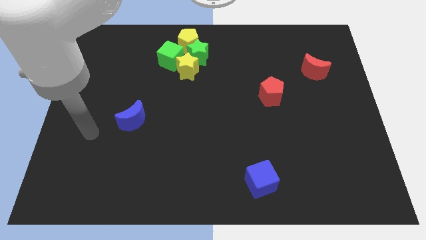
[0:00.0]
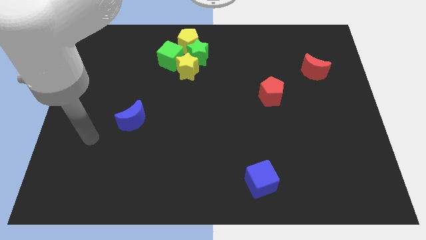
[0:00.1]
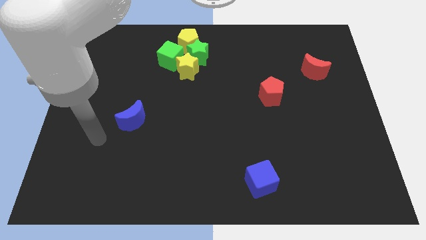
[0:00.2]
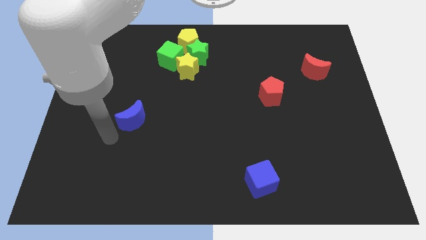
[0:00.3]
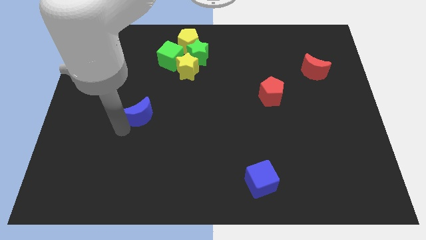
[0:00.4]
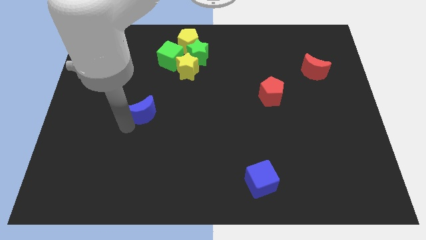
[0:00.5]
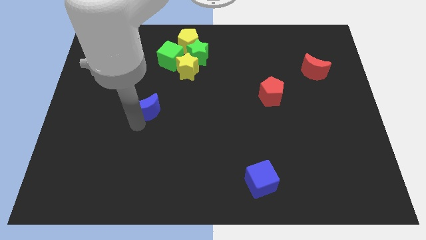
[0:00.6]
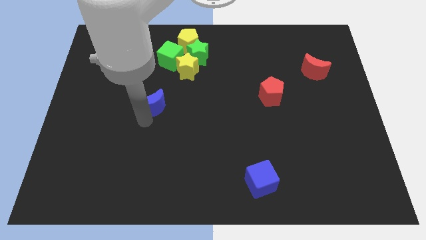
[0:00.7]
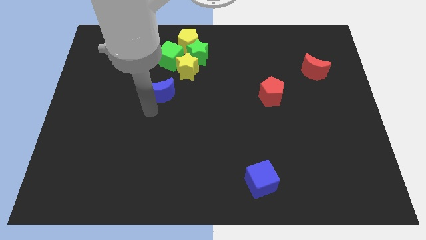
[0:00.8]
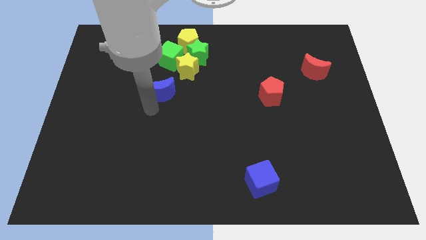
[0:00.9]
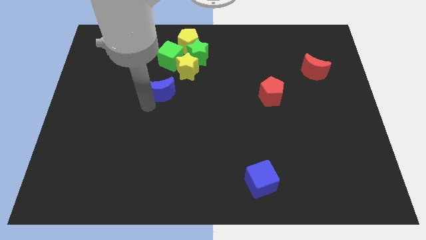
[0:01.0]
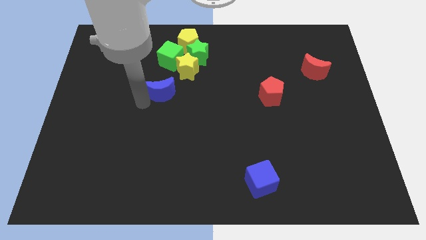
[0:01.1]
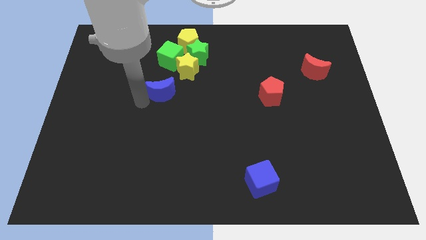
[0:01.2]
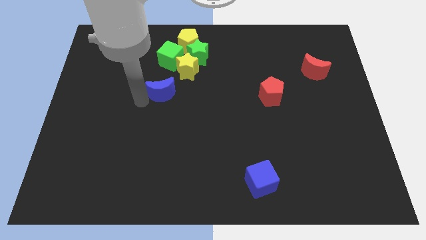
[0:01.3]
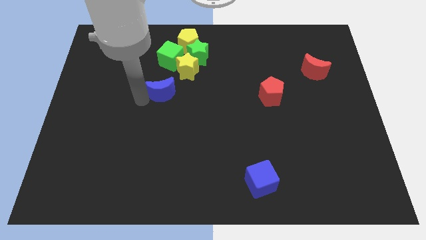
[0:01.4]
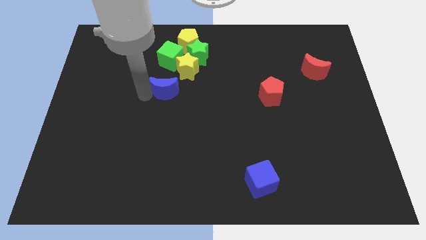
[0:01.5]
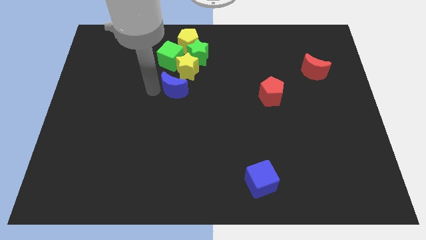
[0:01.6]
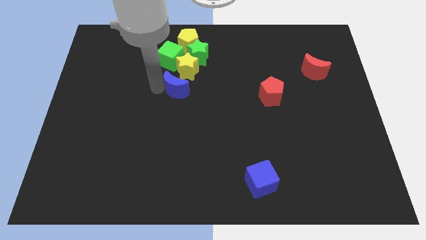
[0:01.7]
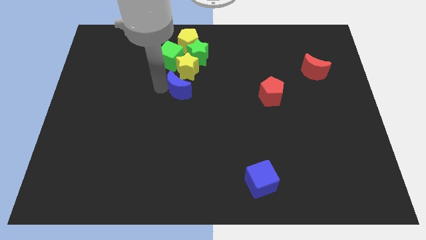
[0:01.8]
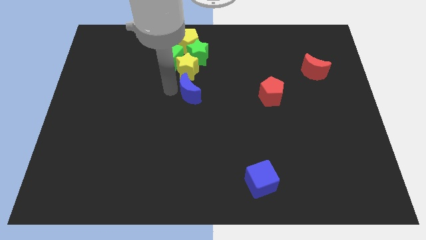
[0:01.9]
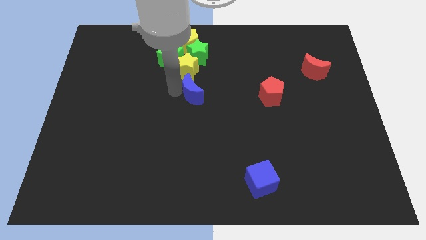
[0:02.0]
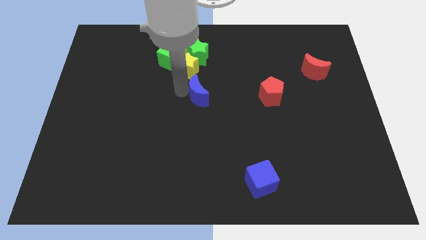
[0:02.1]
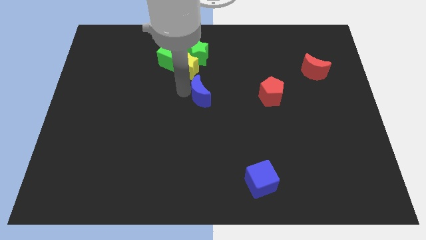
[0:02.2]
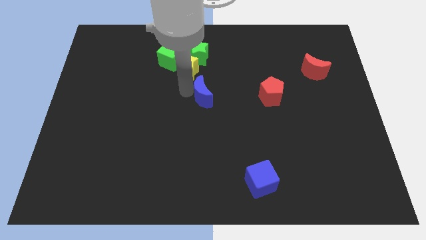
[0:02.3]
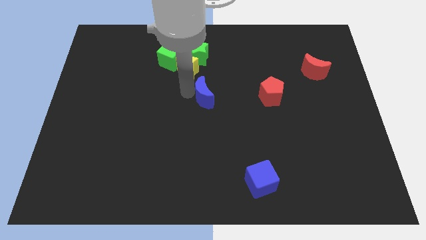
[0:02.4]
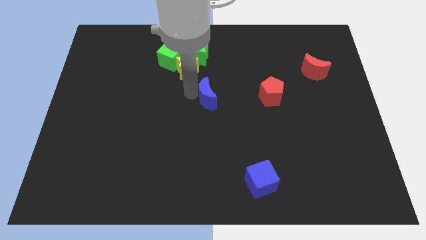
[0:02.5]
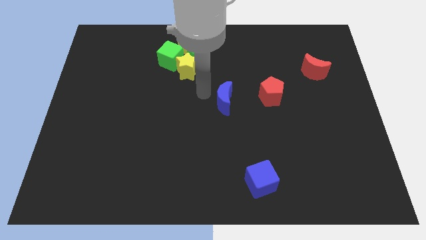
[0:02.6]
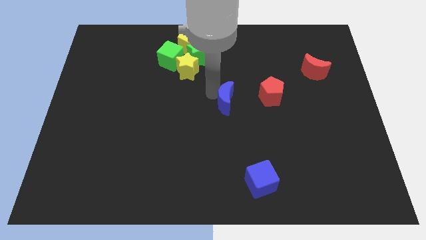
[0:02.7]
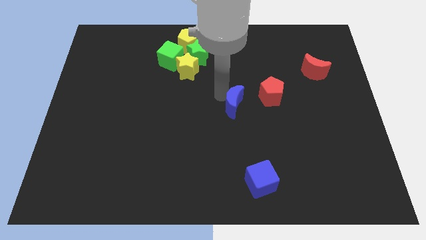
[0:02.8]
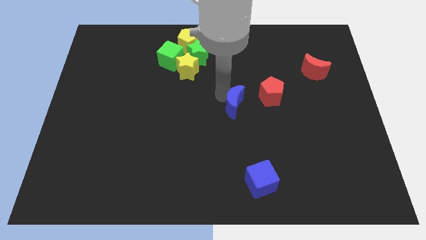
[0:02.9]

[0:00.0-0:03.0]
push blue crecent to the left of the red pentagon

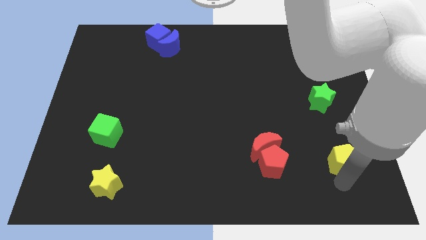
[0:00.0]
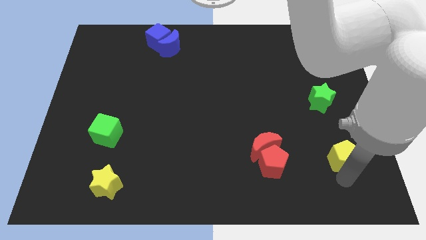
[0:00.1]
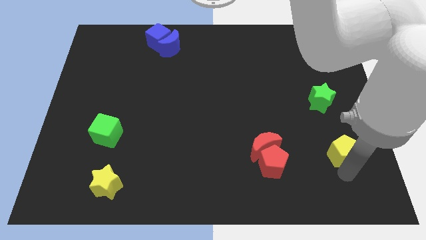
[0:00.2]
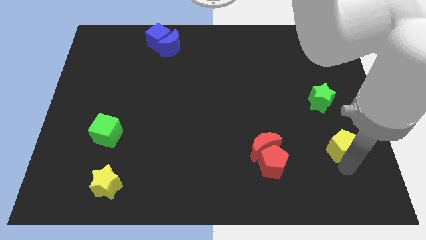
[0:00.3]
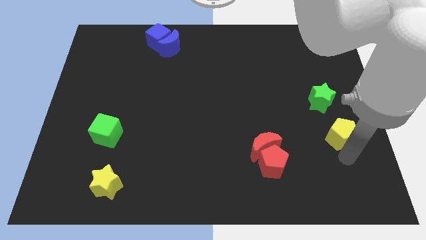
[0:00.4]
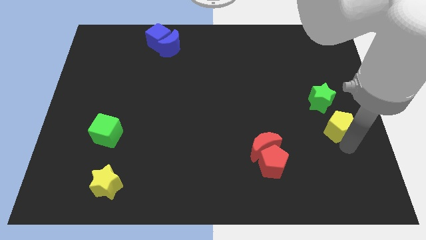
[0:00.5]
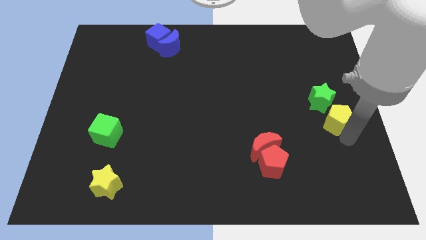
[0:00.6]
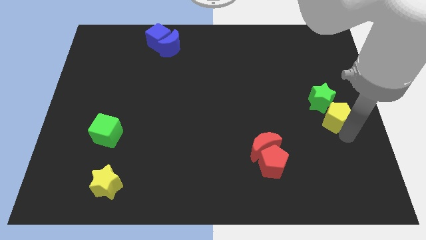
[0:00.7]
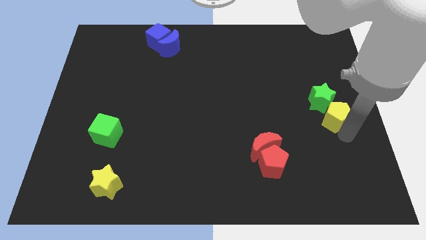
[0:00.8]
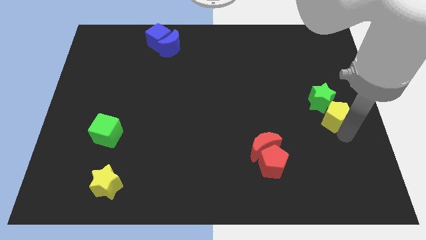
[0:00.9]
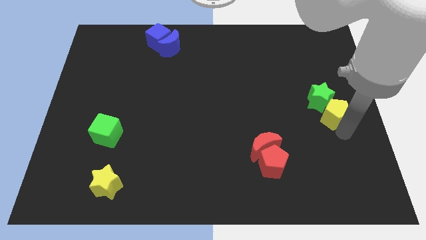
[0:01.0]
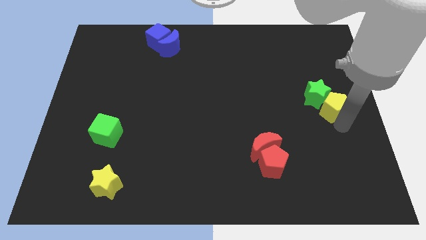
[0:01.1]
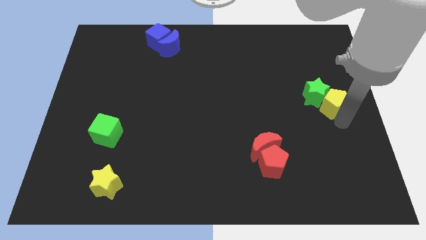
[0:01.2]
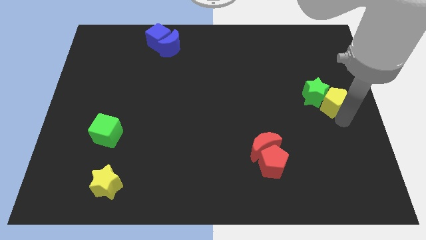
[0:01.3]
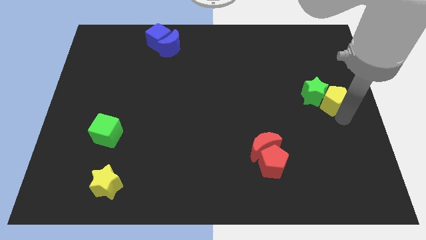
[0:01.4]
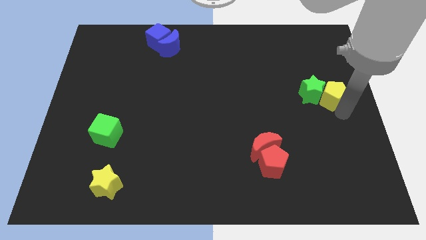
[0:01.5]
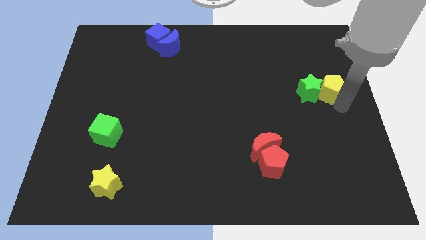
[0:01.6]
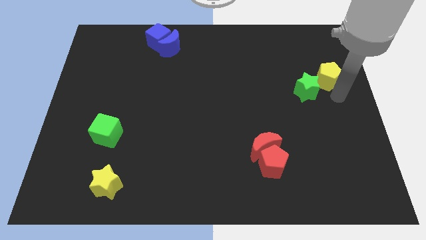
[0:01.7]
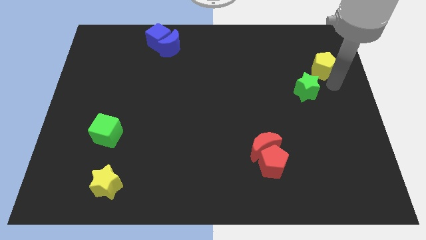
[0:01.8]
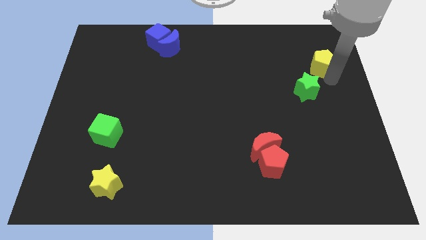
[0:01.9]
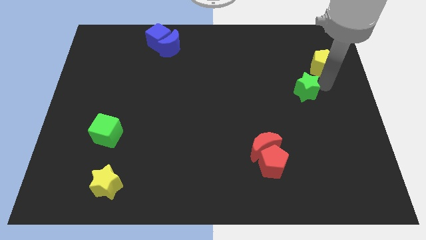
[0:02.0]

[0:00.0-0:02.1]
push the yellow pentagon towards the top right of the board

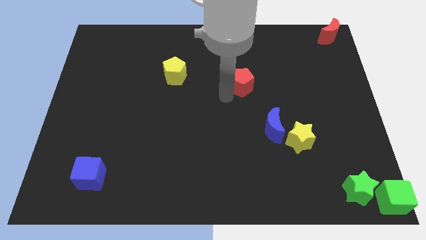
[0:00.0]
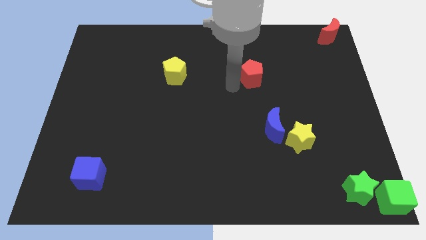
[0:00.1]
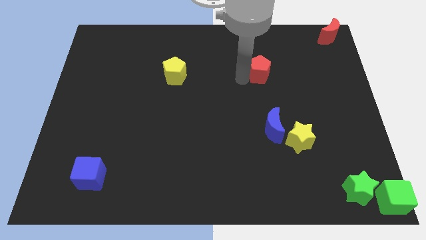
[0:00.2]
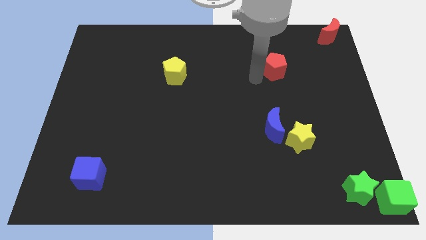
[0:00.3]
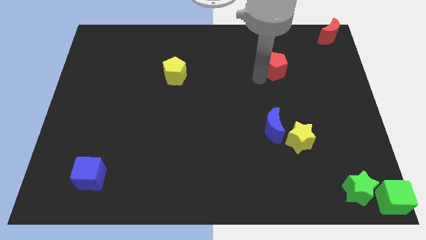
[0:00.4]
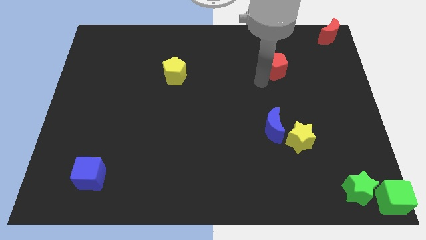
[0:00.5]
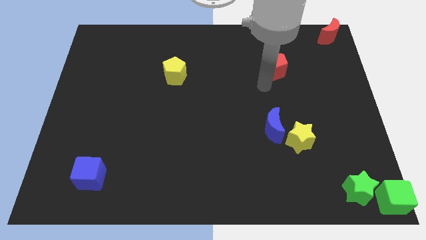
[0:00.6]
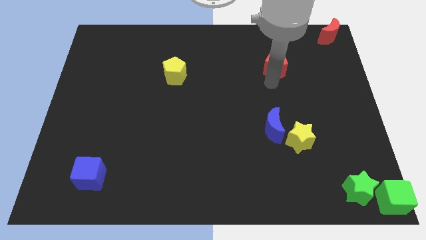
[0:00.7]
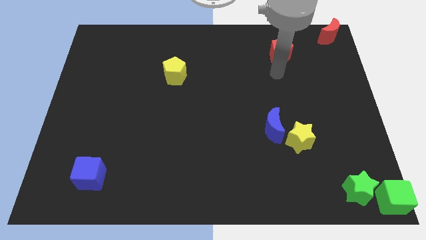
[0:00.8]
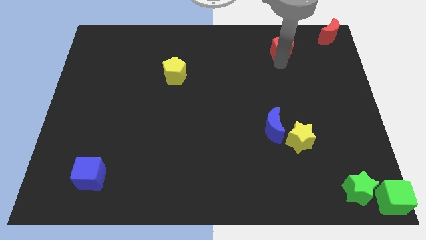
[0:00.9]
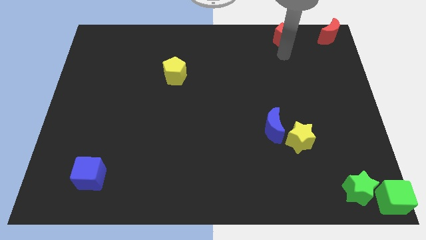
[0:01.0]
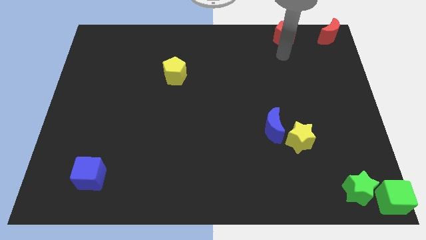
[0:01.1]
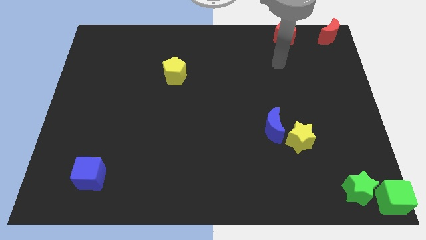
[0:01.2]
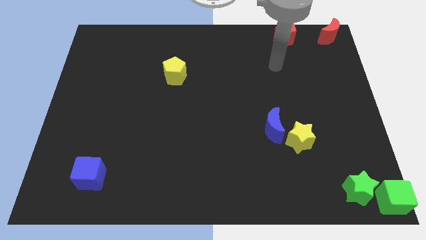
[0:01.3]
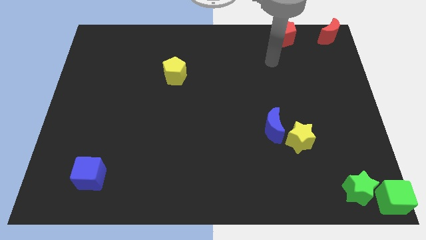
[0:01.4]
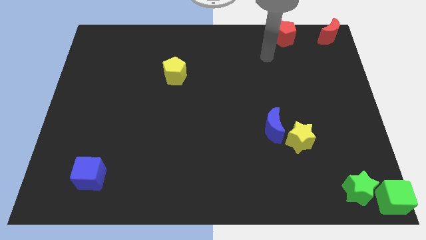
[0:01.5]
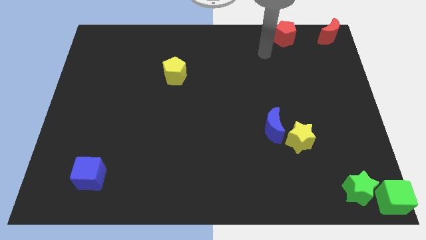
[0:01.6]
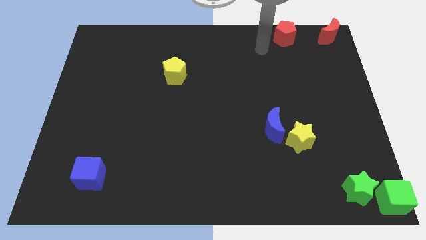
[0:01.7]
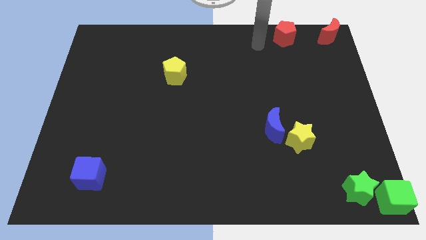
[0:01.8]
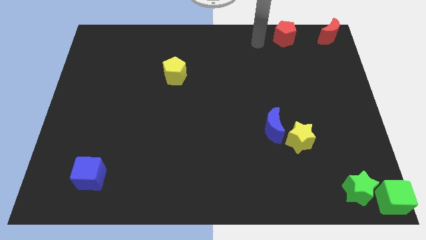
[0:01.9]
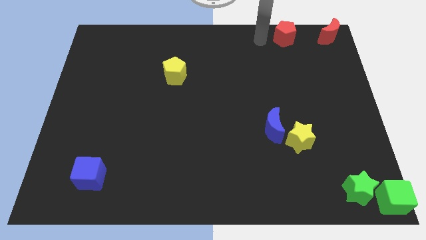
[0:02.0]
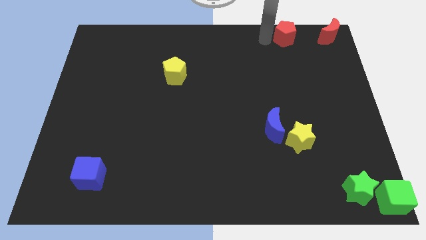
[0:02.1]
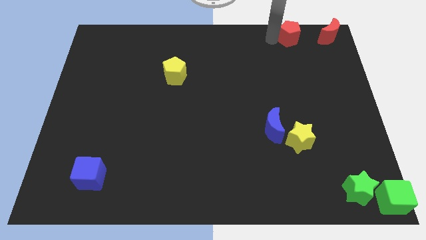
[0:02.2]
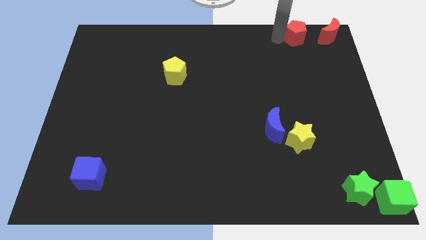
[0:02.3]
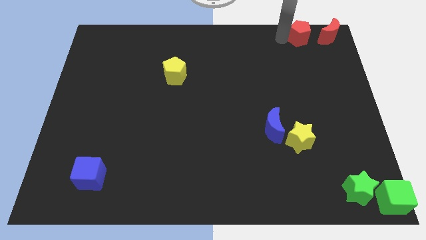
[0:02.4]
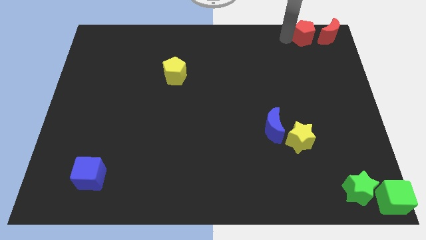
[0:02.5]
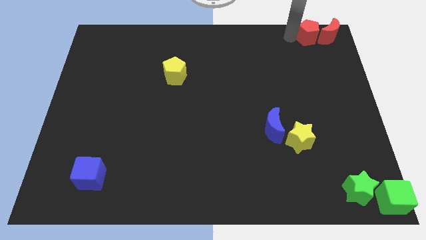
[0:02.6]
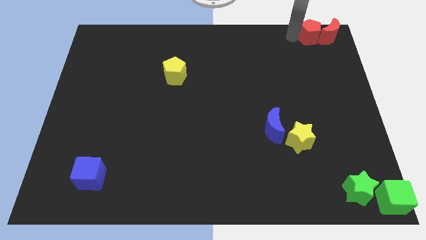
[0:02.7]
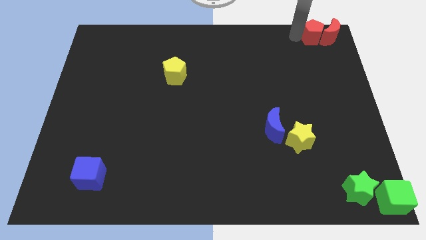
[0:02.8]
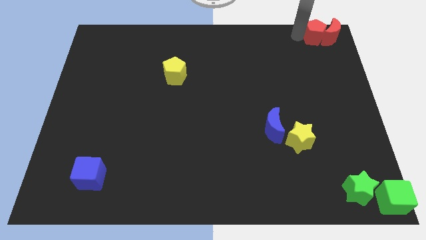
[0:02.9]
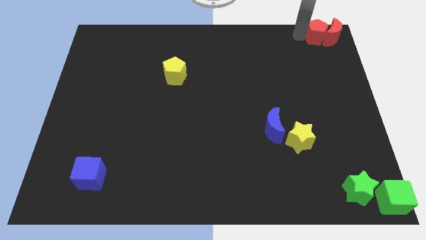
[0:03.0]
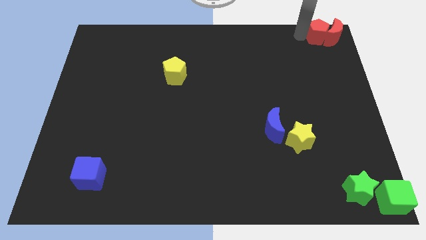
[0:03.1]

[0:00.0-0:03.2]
move red pentagon close to red moon

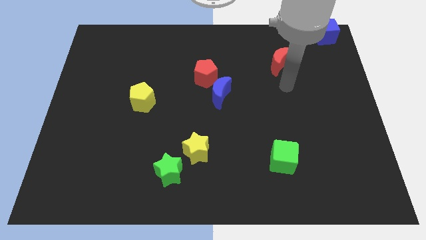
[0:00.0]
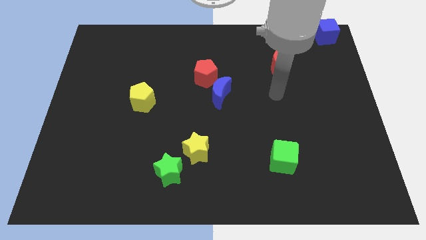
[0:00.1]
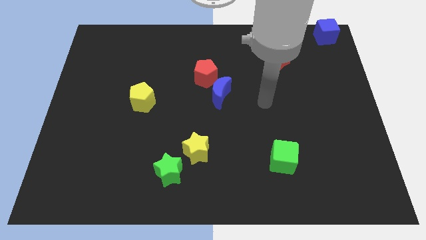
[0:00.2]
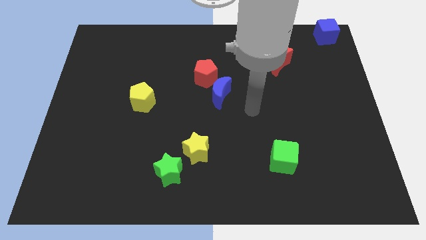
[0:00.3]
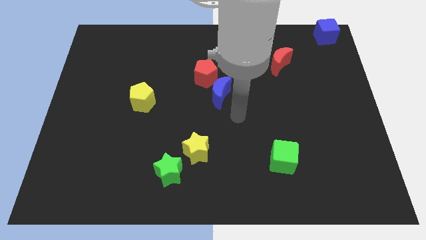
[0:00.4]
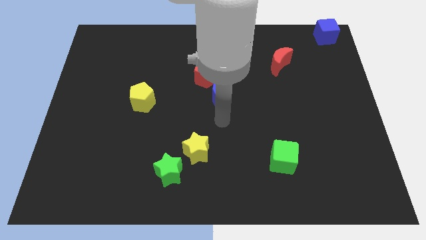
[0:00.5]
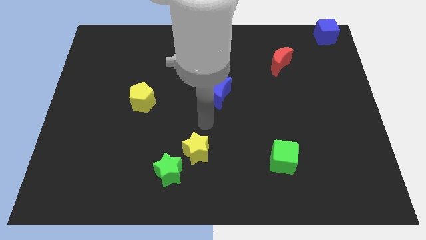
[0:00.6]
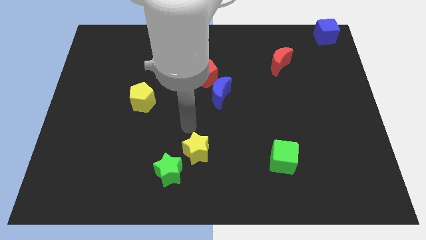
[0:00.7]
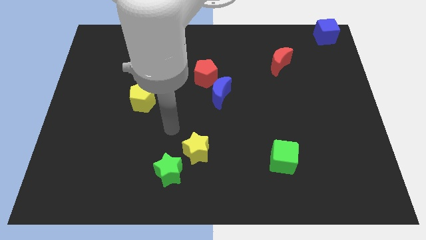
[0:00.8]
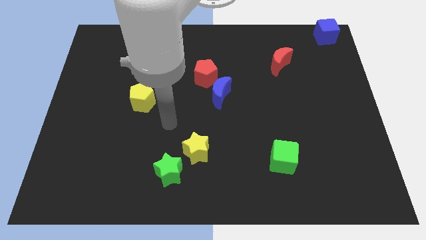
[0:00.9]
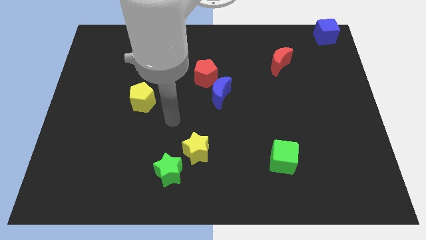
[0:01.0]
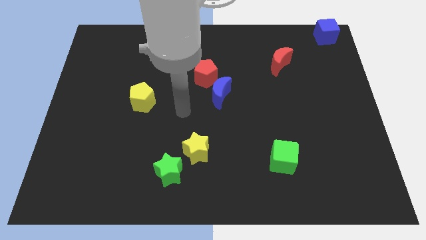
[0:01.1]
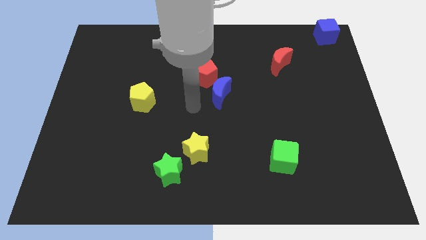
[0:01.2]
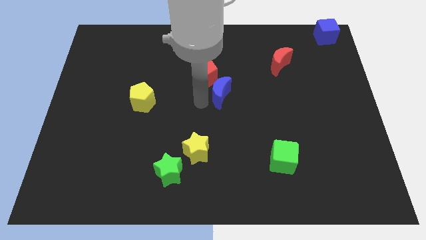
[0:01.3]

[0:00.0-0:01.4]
place the arm near the blue moon
